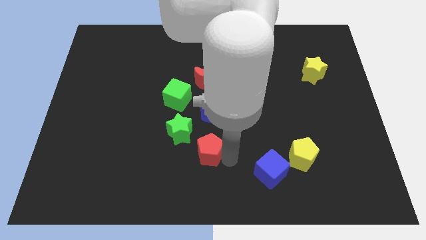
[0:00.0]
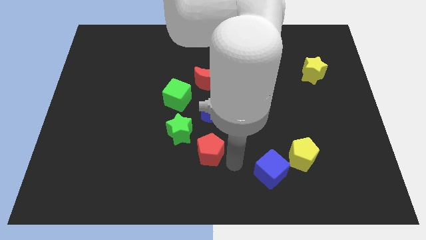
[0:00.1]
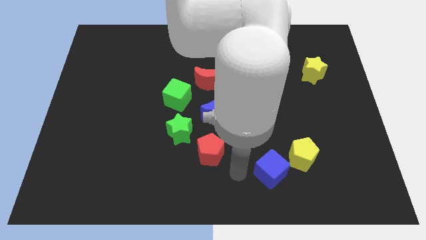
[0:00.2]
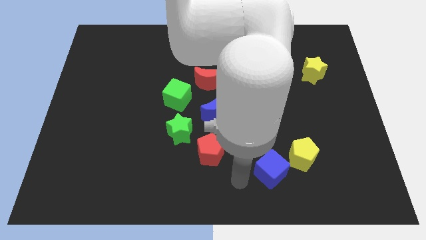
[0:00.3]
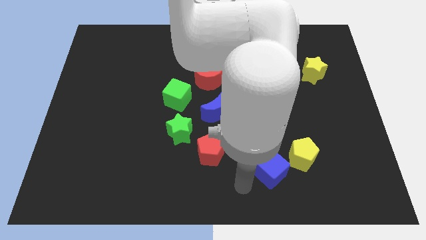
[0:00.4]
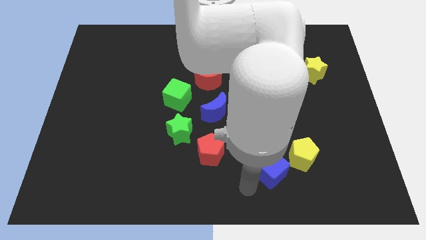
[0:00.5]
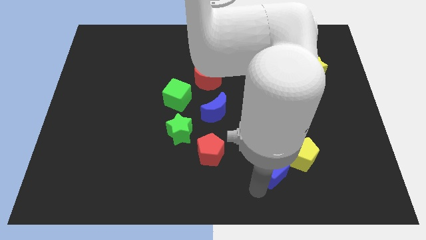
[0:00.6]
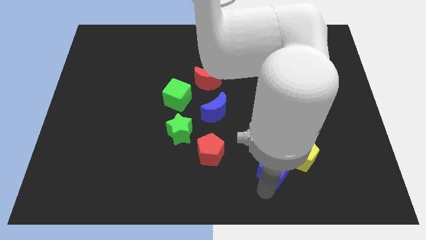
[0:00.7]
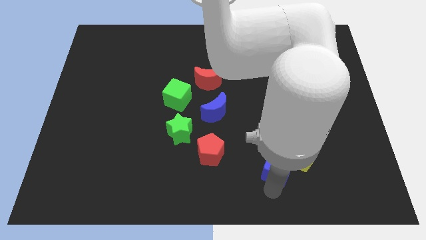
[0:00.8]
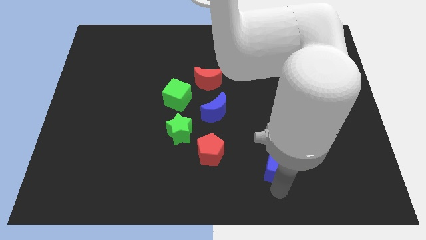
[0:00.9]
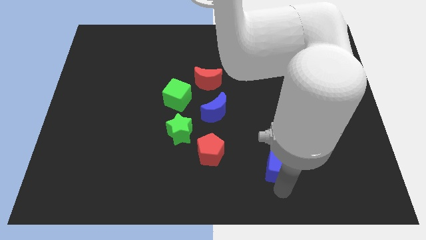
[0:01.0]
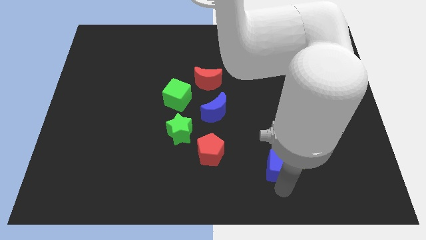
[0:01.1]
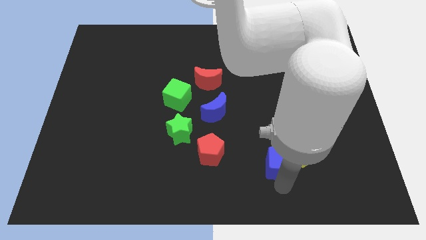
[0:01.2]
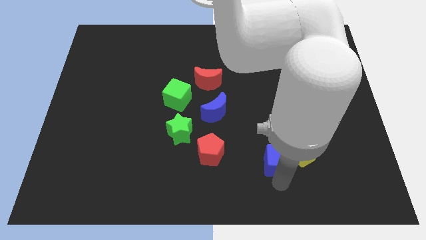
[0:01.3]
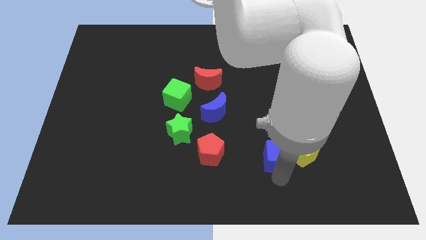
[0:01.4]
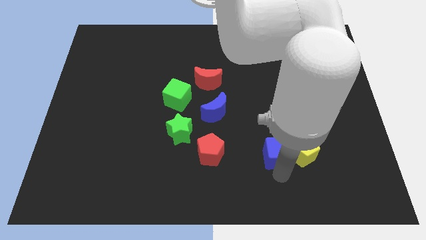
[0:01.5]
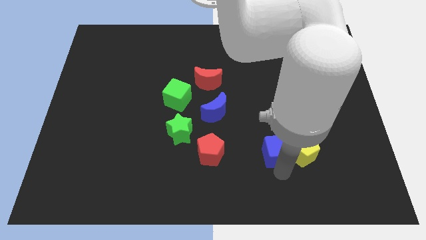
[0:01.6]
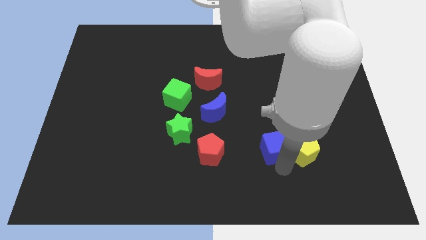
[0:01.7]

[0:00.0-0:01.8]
place blue cube to the left of yellow pentagon

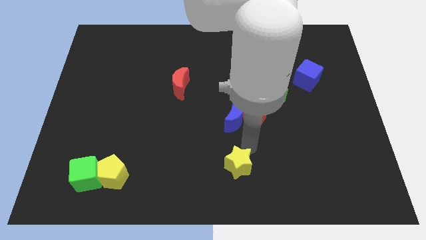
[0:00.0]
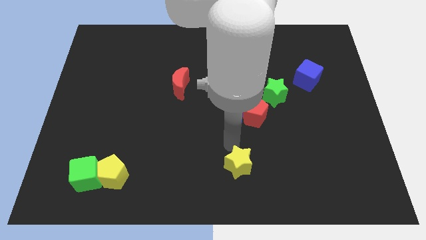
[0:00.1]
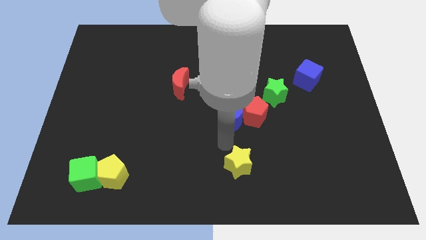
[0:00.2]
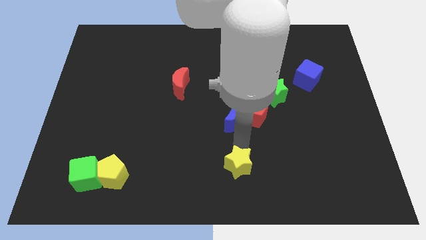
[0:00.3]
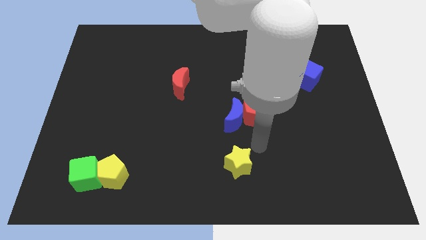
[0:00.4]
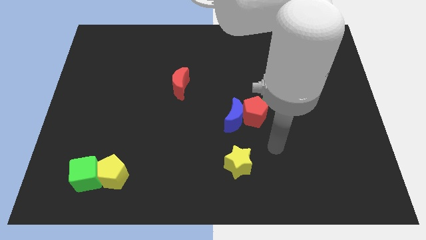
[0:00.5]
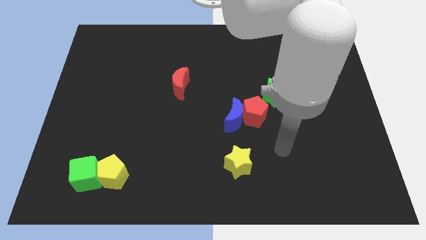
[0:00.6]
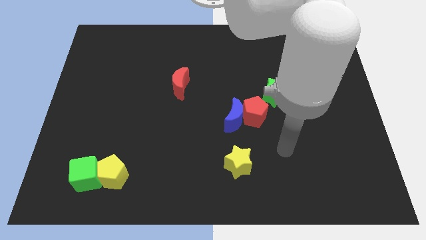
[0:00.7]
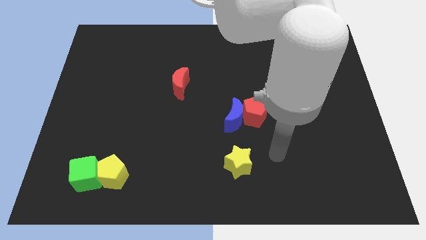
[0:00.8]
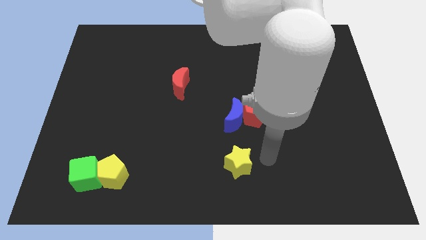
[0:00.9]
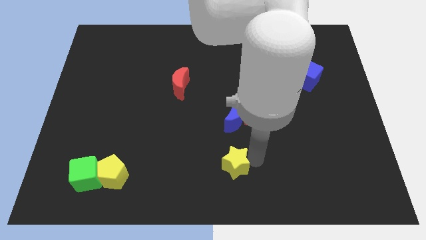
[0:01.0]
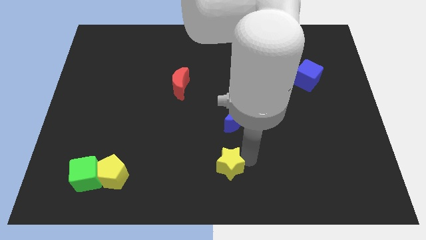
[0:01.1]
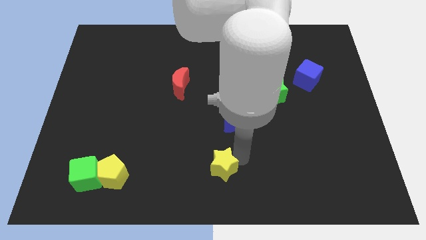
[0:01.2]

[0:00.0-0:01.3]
push yellow star below blue crescent

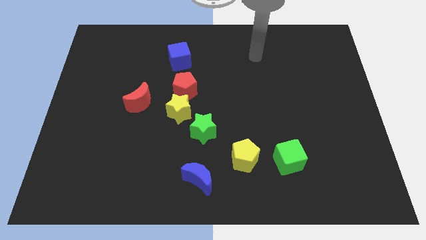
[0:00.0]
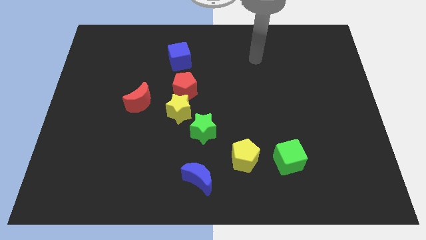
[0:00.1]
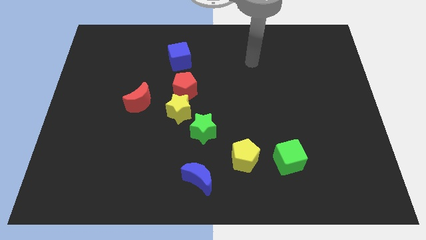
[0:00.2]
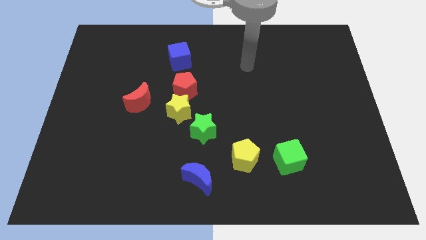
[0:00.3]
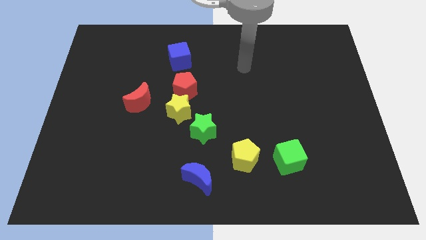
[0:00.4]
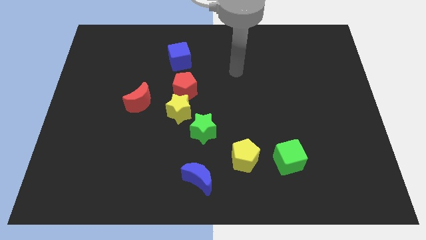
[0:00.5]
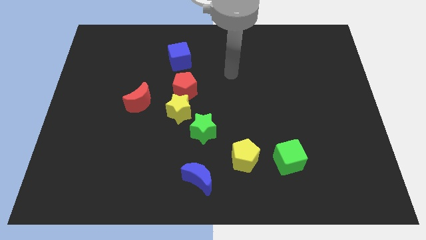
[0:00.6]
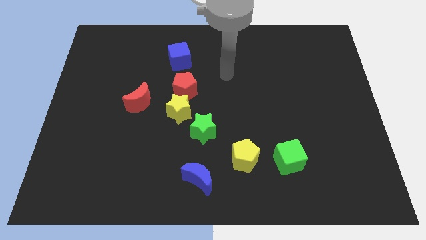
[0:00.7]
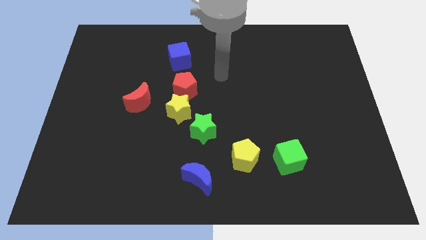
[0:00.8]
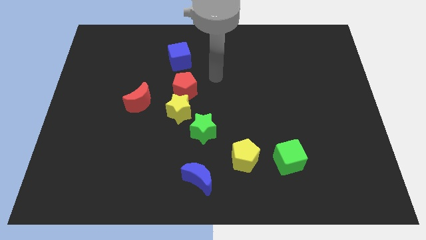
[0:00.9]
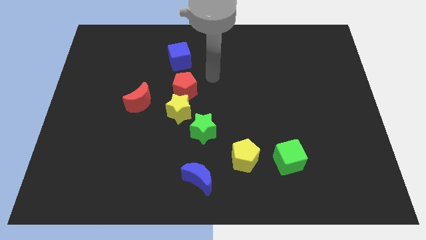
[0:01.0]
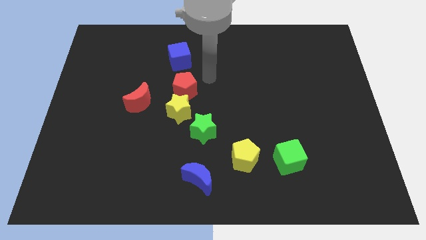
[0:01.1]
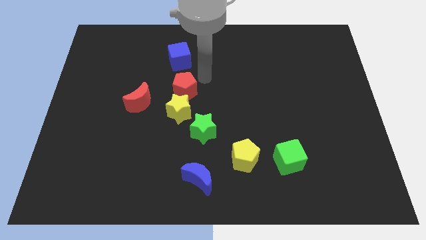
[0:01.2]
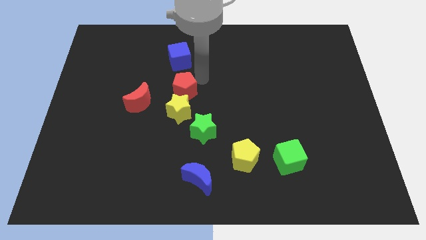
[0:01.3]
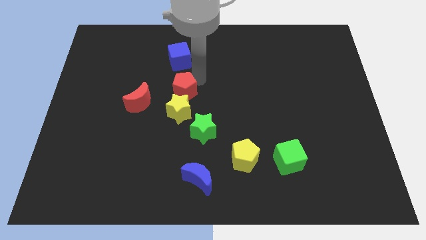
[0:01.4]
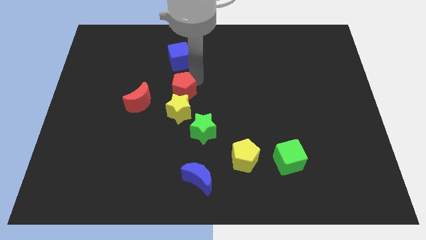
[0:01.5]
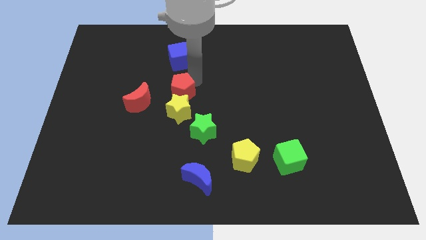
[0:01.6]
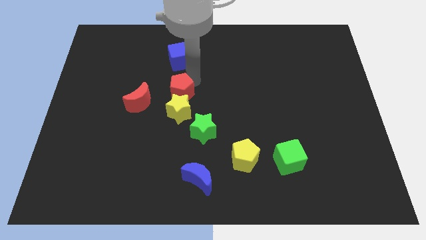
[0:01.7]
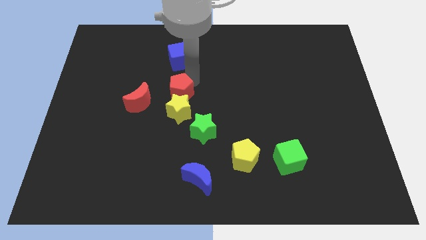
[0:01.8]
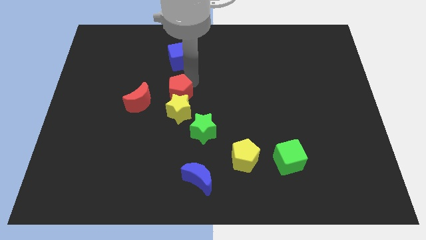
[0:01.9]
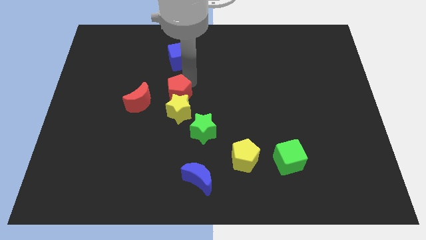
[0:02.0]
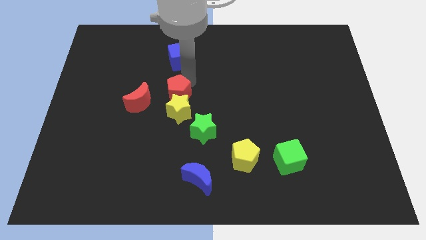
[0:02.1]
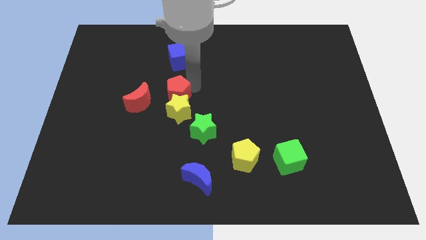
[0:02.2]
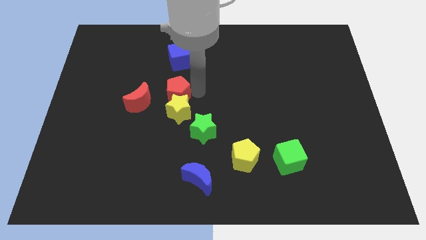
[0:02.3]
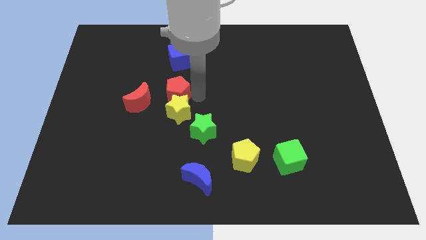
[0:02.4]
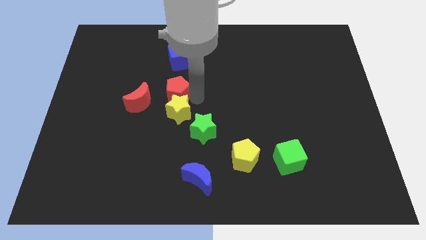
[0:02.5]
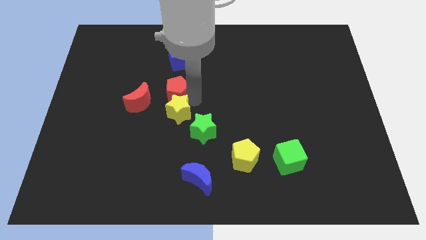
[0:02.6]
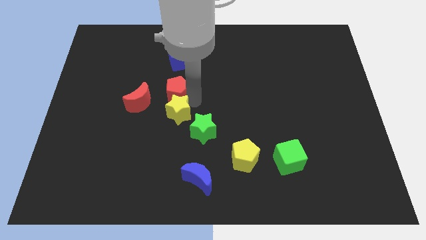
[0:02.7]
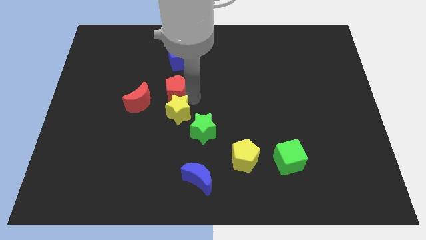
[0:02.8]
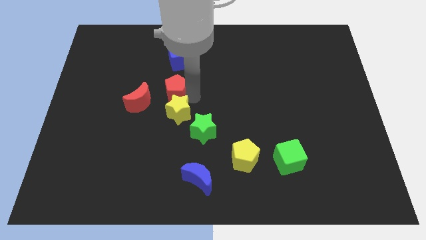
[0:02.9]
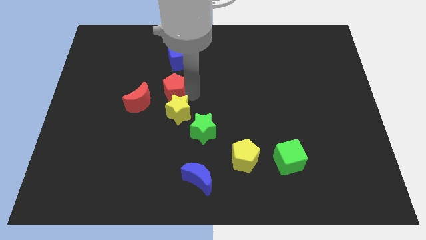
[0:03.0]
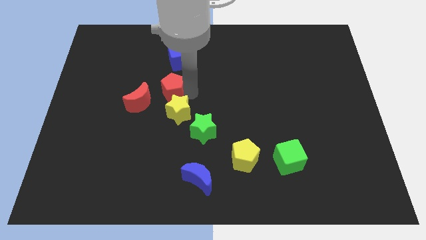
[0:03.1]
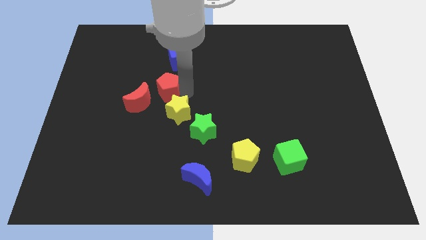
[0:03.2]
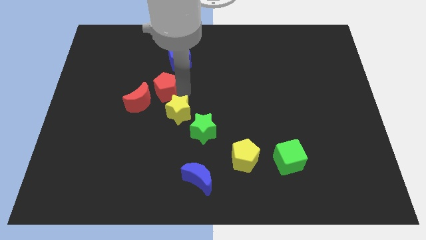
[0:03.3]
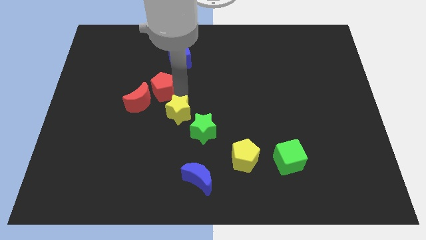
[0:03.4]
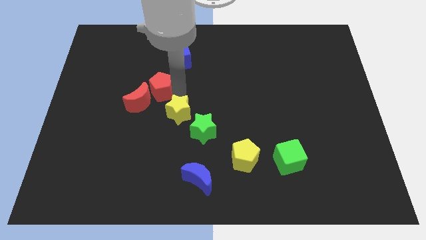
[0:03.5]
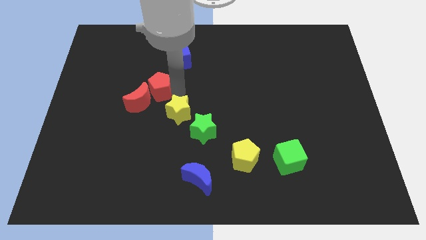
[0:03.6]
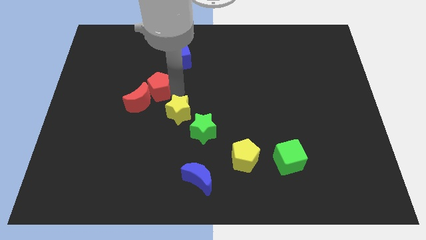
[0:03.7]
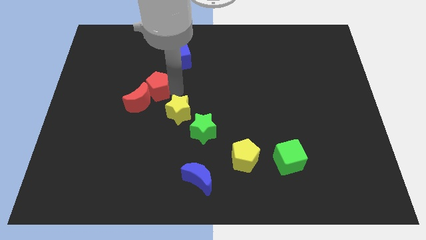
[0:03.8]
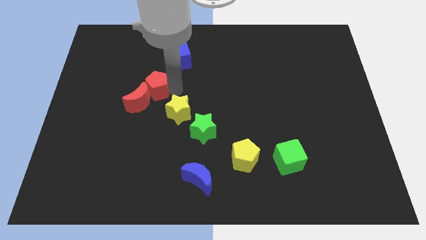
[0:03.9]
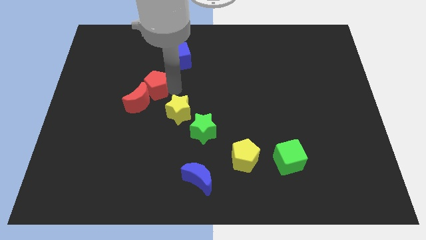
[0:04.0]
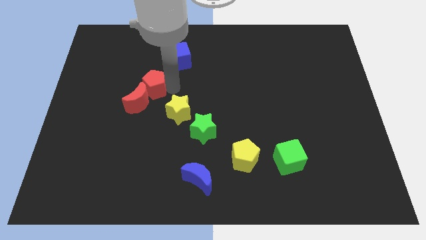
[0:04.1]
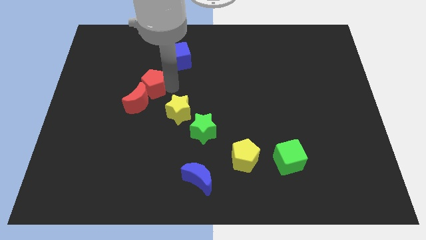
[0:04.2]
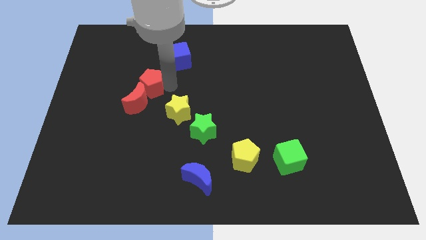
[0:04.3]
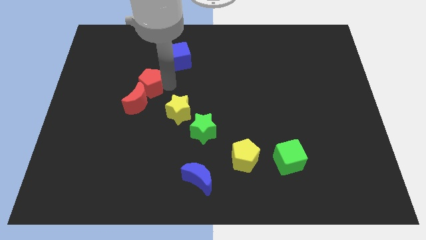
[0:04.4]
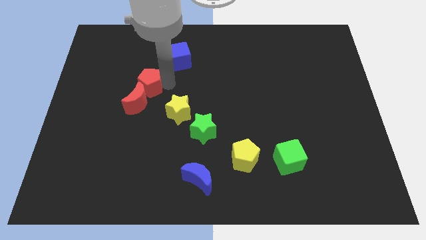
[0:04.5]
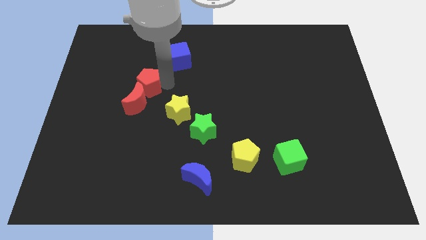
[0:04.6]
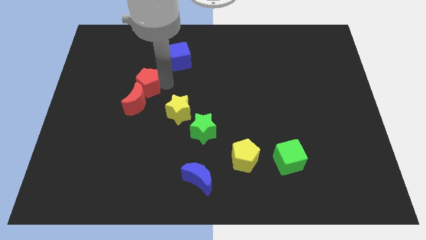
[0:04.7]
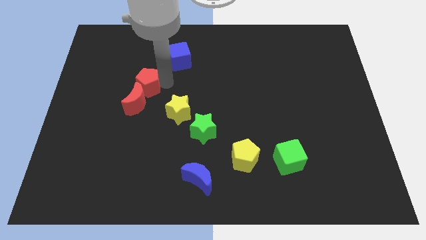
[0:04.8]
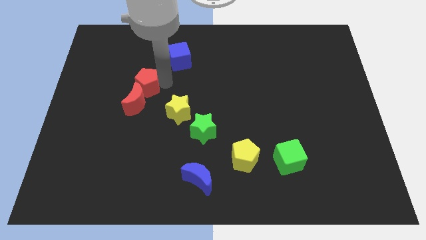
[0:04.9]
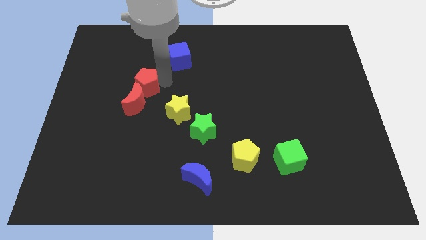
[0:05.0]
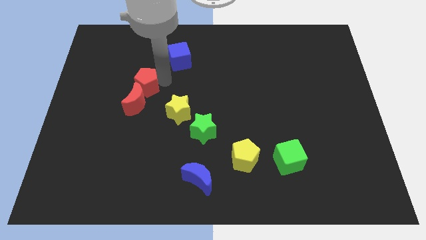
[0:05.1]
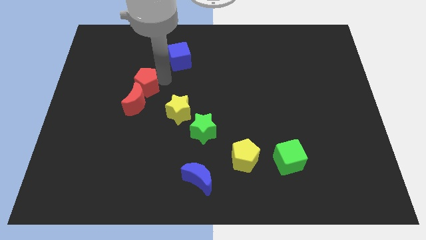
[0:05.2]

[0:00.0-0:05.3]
move the red pentagon above the red crescent

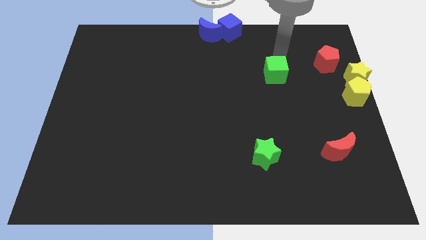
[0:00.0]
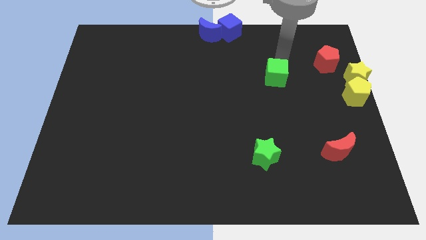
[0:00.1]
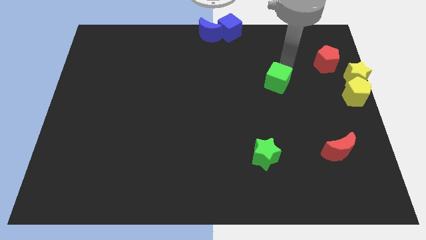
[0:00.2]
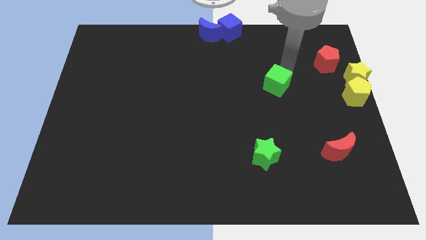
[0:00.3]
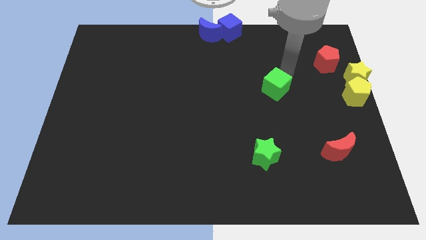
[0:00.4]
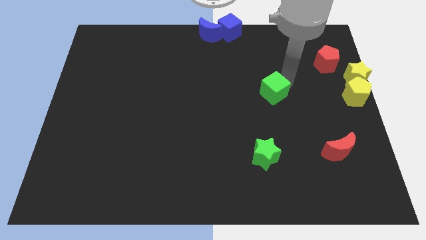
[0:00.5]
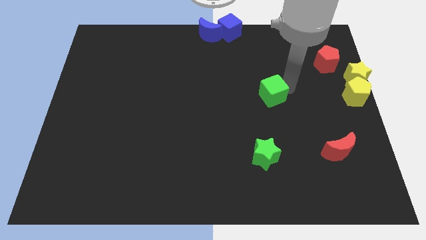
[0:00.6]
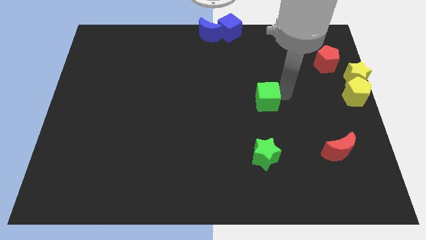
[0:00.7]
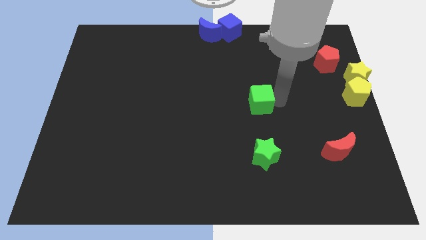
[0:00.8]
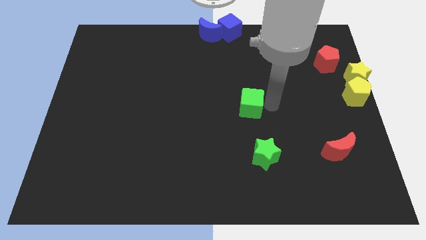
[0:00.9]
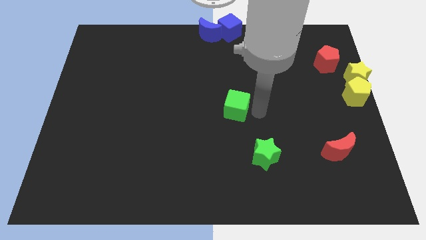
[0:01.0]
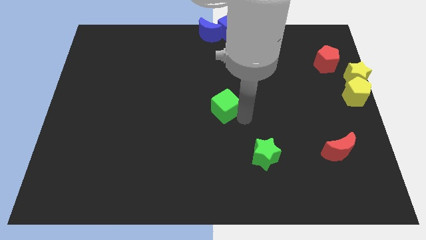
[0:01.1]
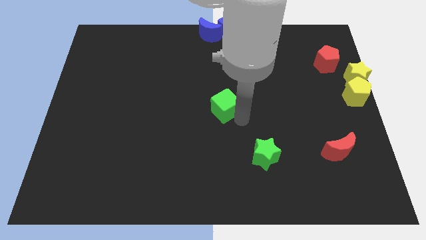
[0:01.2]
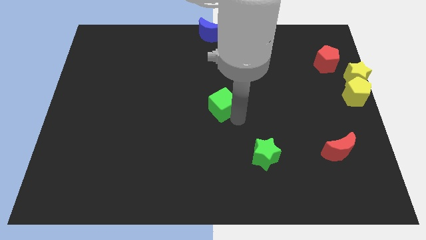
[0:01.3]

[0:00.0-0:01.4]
move the green cube to the middle of the board
